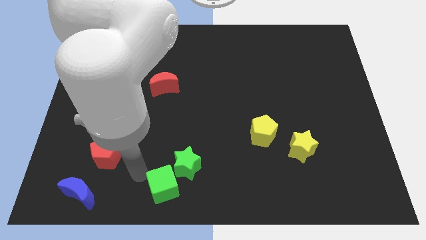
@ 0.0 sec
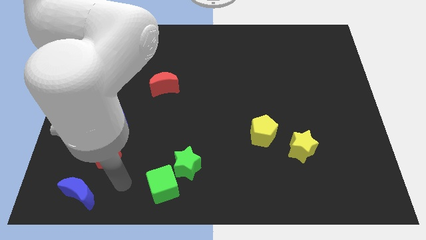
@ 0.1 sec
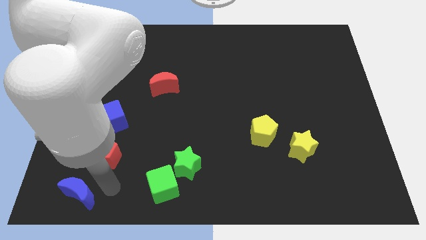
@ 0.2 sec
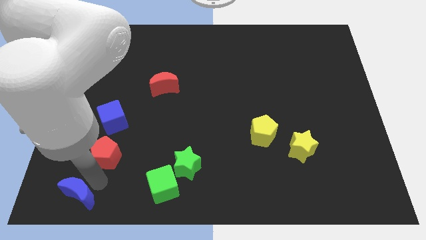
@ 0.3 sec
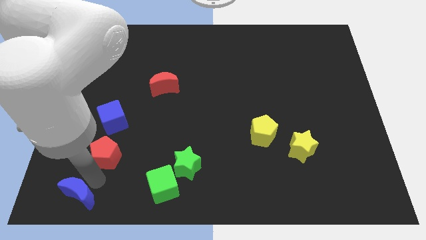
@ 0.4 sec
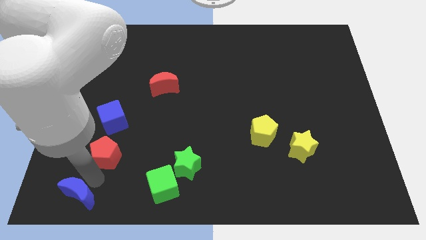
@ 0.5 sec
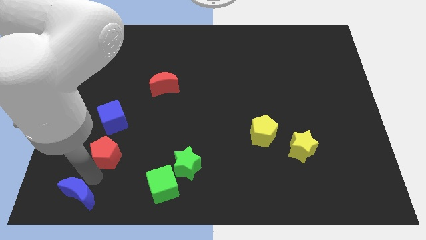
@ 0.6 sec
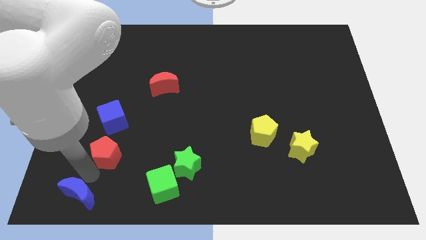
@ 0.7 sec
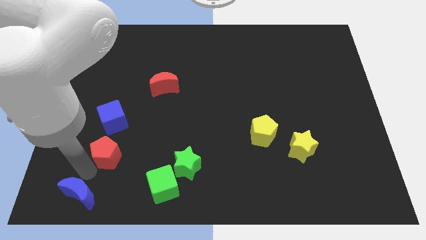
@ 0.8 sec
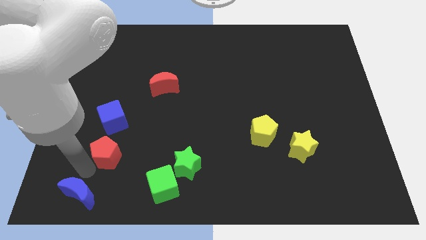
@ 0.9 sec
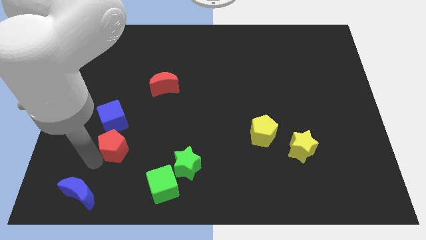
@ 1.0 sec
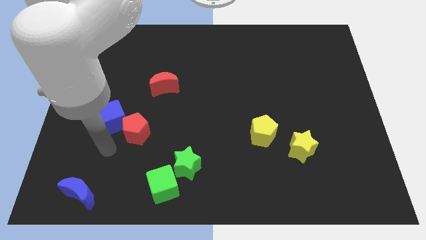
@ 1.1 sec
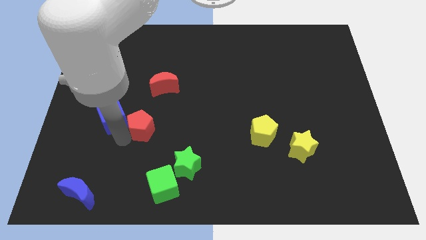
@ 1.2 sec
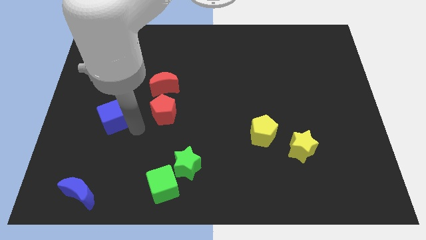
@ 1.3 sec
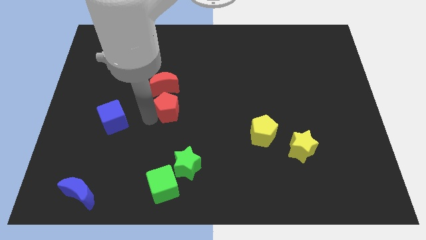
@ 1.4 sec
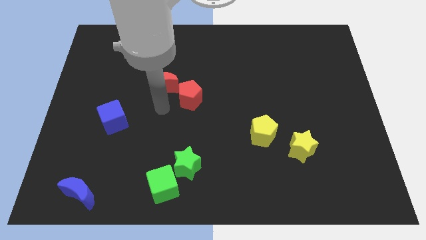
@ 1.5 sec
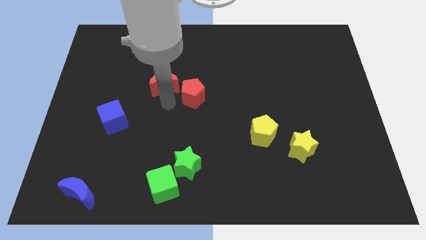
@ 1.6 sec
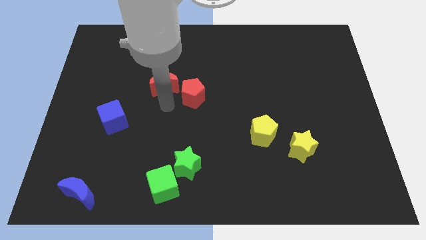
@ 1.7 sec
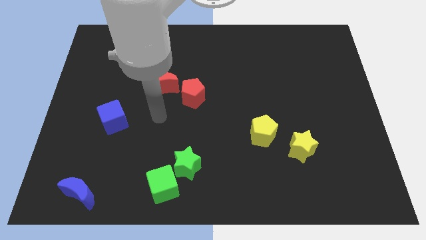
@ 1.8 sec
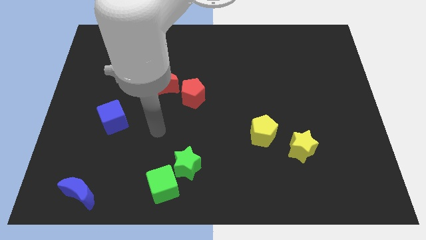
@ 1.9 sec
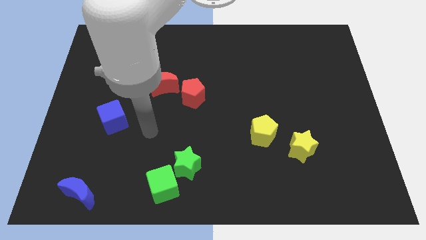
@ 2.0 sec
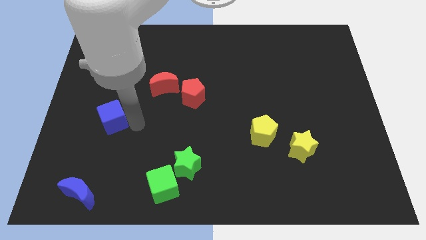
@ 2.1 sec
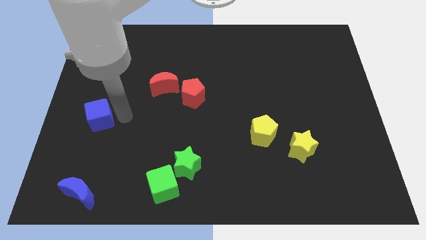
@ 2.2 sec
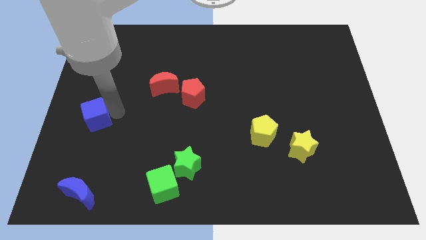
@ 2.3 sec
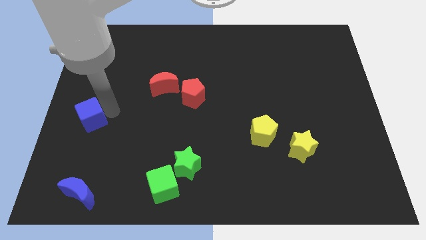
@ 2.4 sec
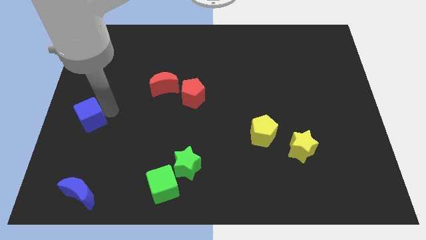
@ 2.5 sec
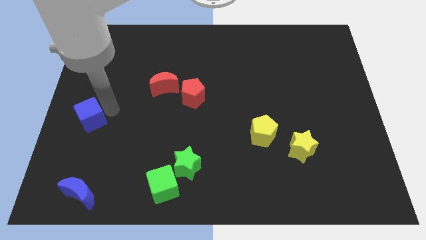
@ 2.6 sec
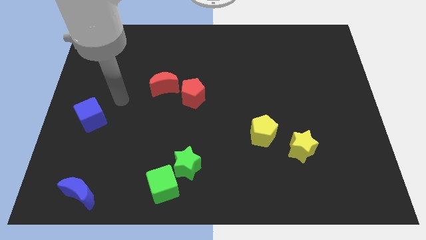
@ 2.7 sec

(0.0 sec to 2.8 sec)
move the red pentagon to the right of the red crescent

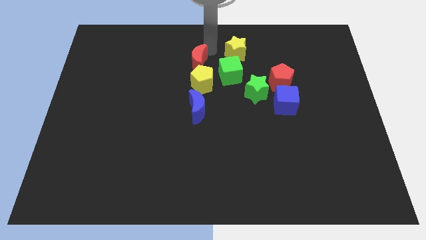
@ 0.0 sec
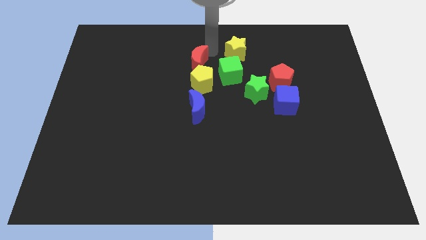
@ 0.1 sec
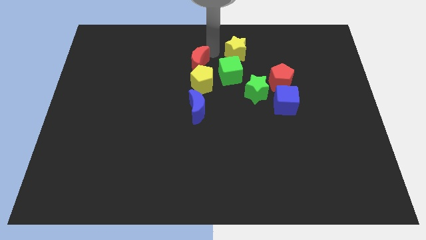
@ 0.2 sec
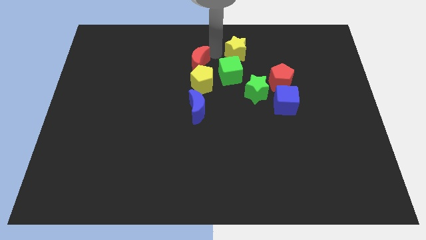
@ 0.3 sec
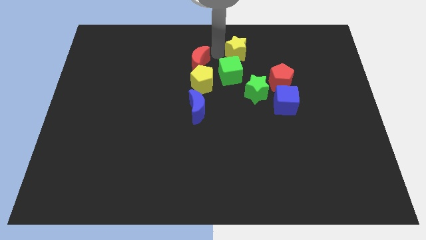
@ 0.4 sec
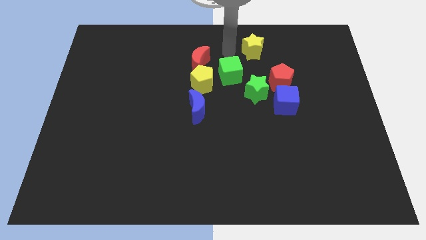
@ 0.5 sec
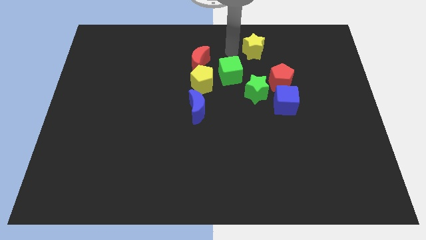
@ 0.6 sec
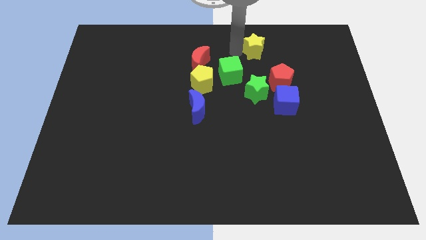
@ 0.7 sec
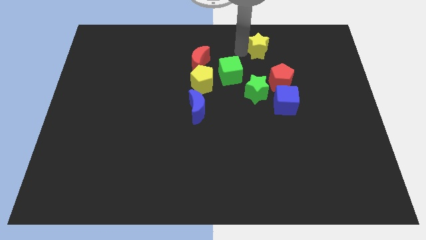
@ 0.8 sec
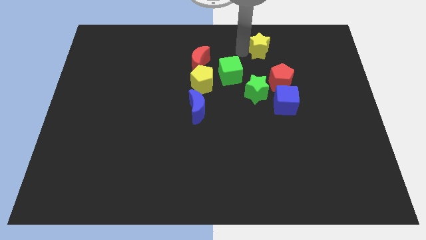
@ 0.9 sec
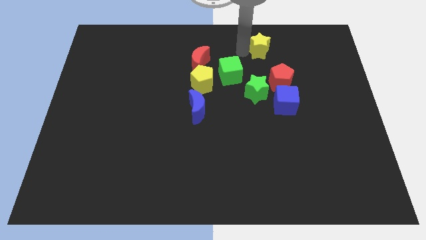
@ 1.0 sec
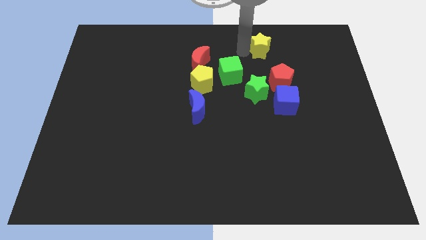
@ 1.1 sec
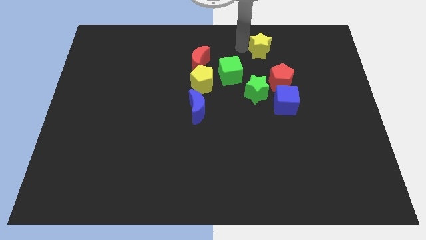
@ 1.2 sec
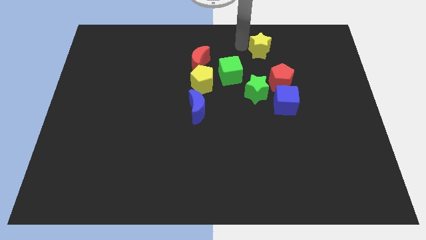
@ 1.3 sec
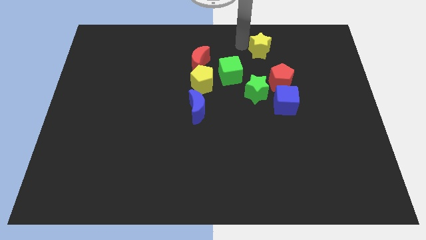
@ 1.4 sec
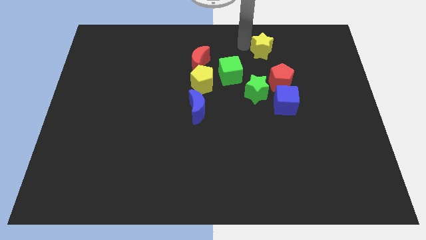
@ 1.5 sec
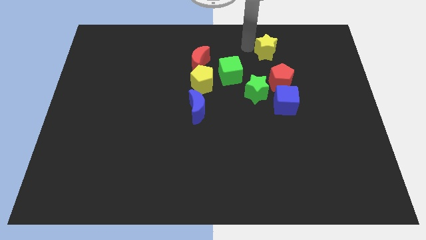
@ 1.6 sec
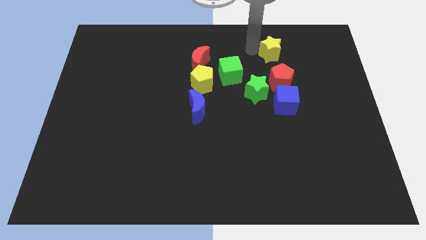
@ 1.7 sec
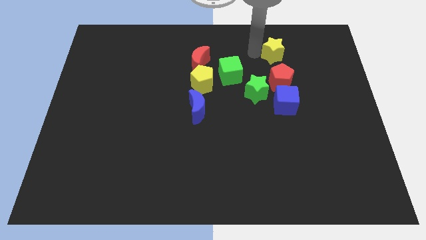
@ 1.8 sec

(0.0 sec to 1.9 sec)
push yellow start to the top of red pentagon

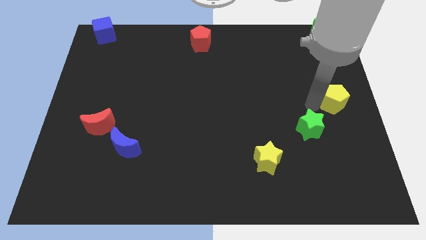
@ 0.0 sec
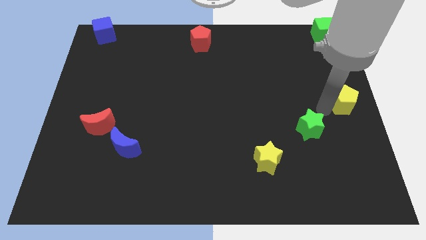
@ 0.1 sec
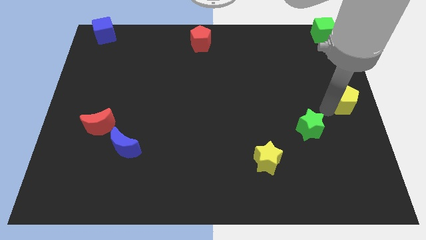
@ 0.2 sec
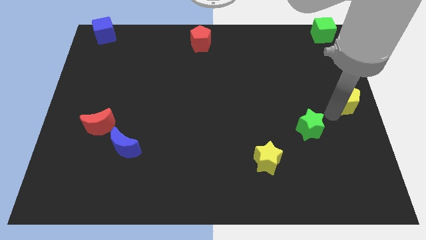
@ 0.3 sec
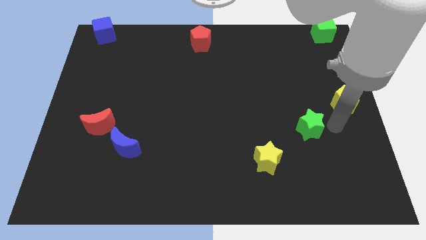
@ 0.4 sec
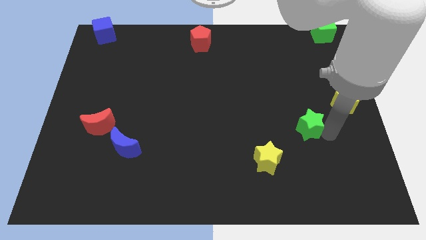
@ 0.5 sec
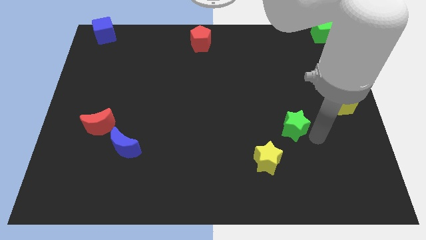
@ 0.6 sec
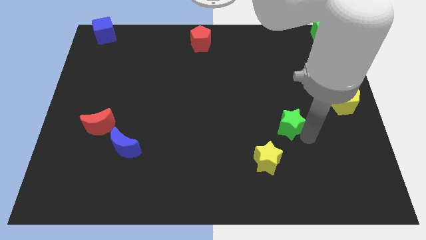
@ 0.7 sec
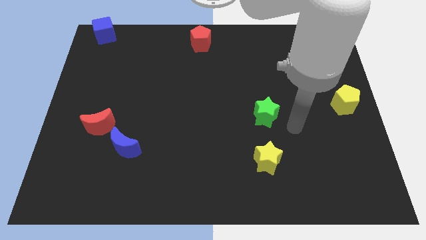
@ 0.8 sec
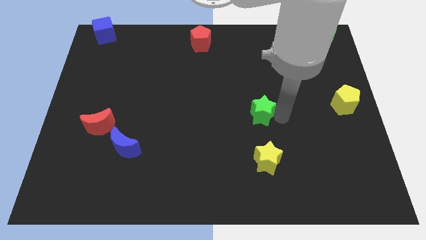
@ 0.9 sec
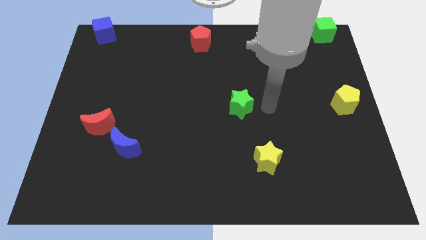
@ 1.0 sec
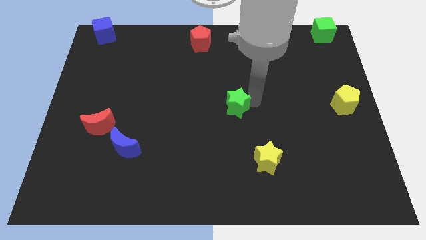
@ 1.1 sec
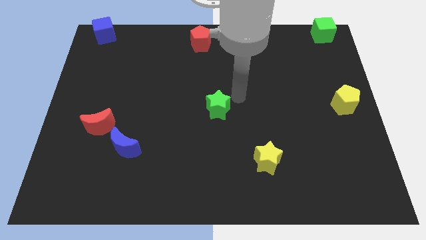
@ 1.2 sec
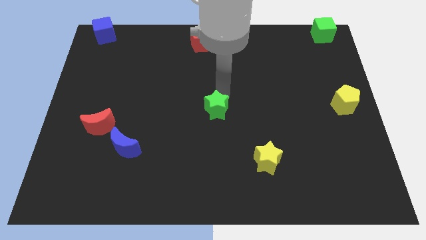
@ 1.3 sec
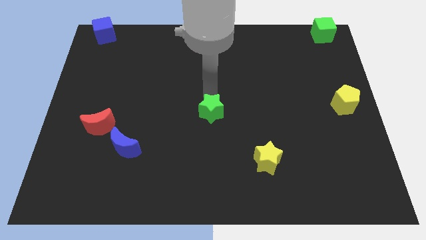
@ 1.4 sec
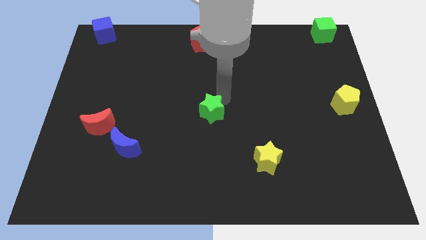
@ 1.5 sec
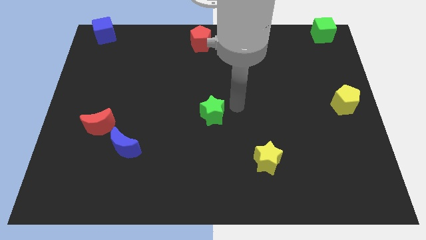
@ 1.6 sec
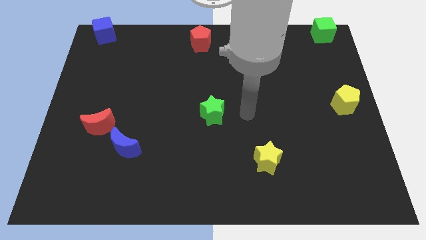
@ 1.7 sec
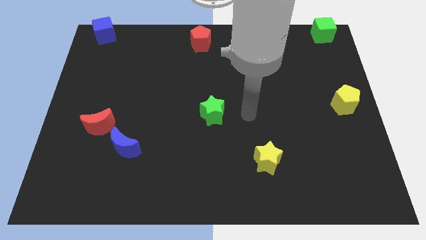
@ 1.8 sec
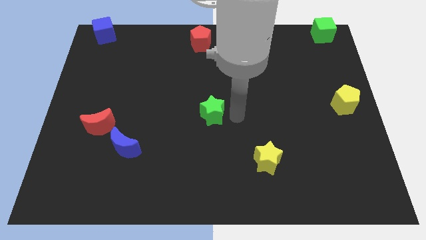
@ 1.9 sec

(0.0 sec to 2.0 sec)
move the green star to the centre of the board

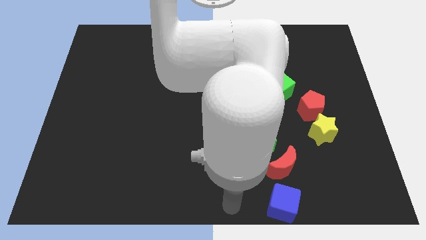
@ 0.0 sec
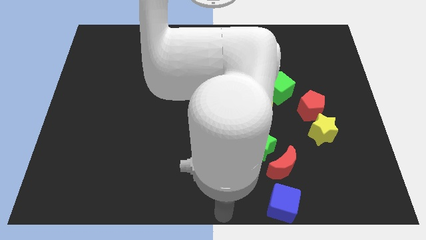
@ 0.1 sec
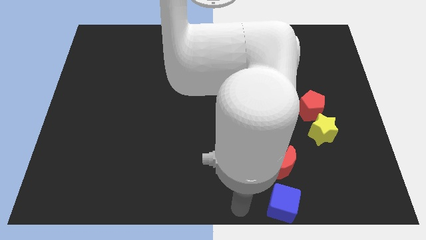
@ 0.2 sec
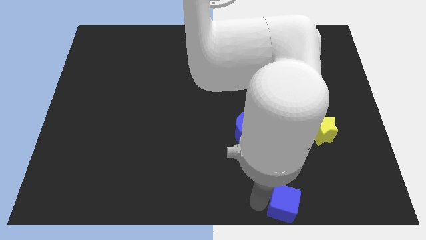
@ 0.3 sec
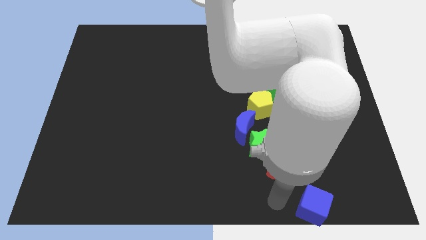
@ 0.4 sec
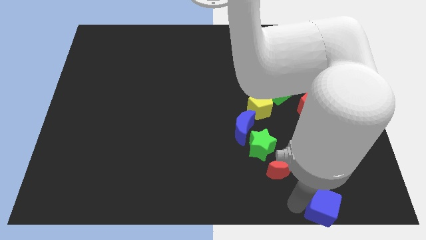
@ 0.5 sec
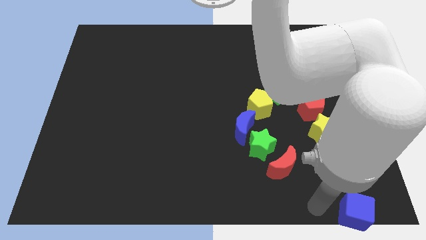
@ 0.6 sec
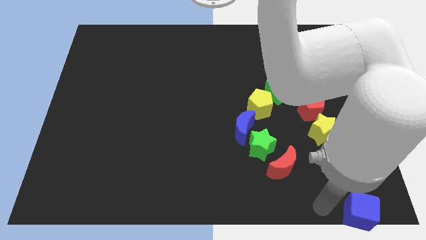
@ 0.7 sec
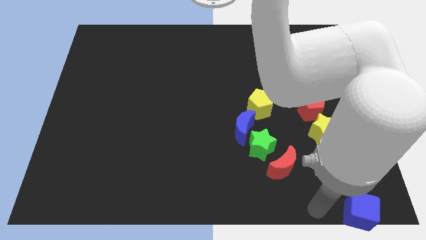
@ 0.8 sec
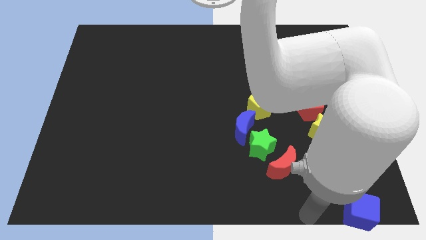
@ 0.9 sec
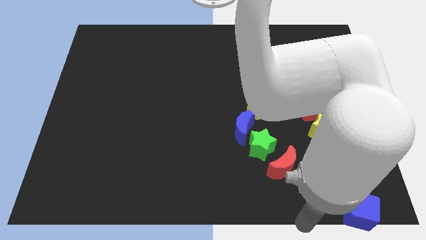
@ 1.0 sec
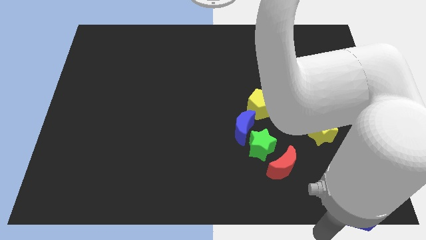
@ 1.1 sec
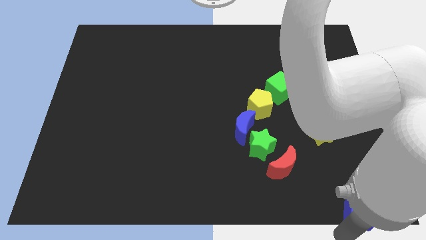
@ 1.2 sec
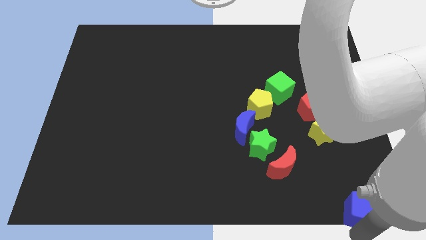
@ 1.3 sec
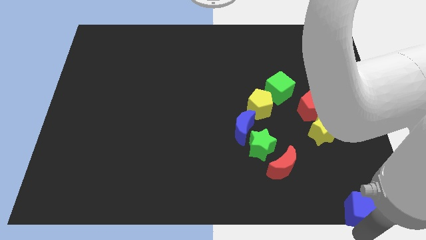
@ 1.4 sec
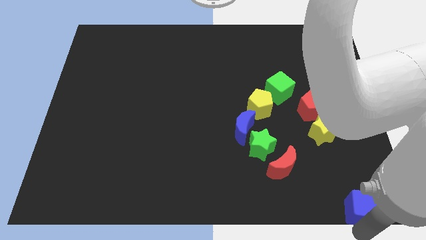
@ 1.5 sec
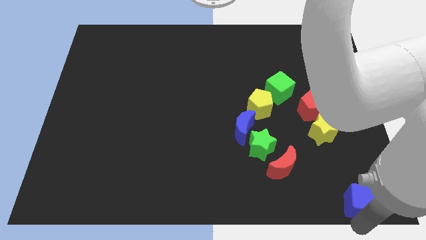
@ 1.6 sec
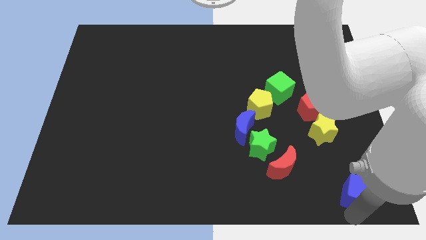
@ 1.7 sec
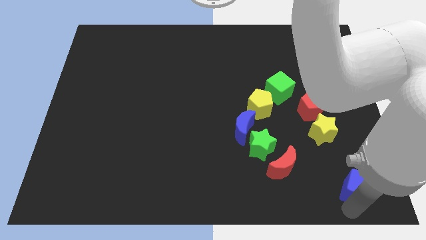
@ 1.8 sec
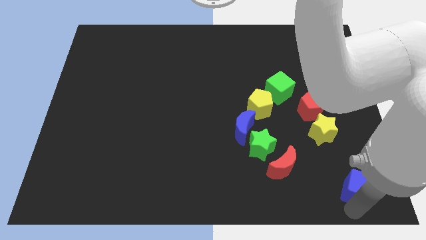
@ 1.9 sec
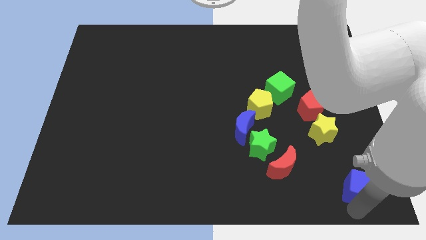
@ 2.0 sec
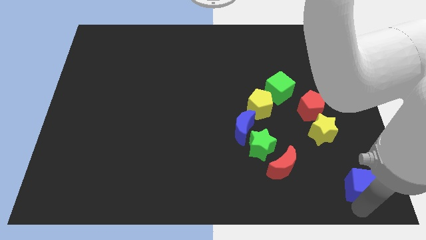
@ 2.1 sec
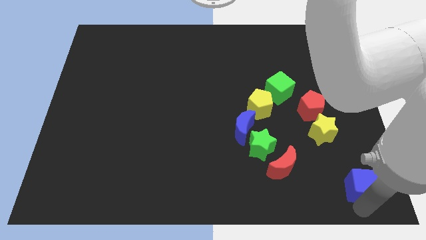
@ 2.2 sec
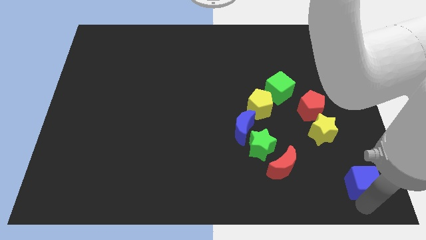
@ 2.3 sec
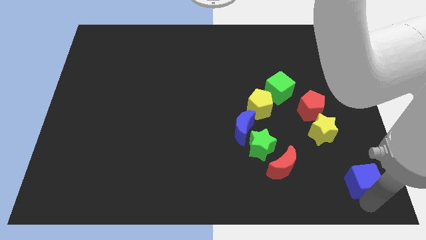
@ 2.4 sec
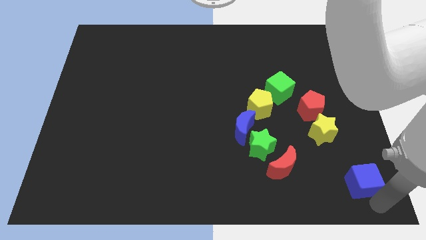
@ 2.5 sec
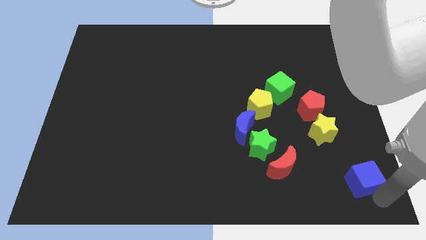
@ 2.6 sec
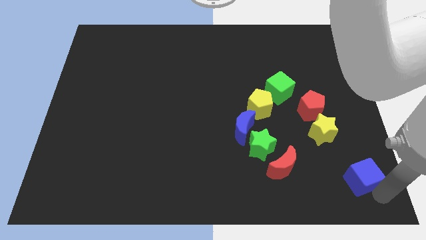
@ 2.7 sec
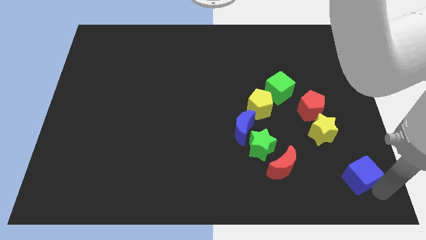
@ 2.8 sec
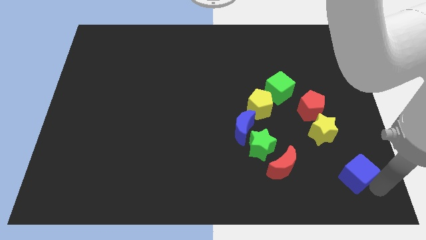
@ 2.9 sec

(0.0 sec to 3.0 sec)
push the blue cube to the bottom right
